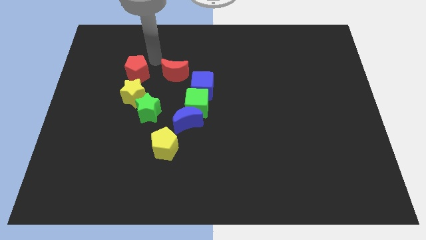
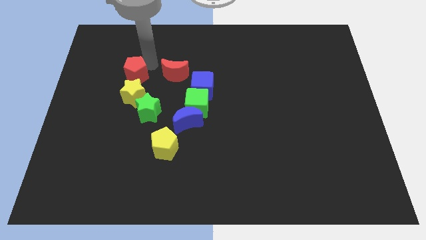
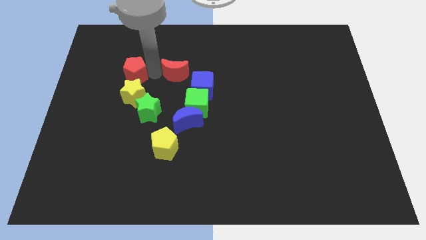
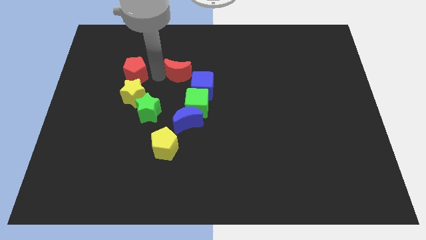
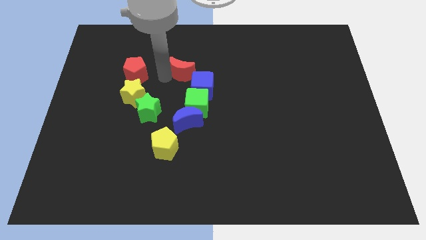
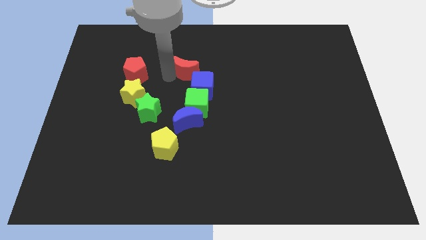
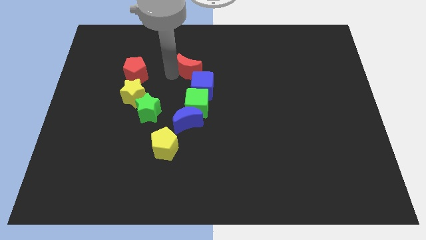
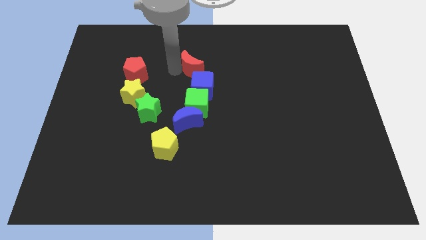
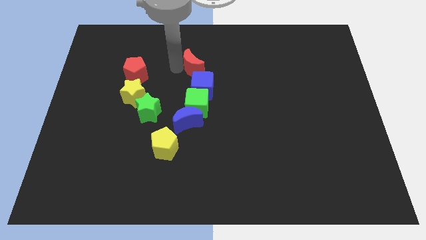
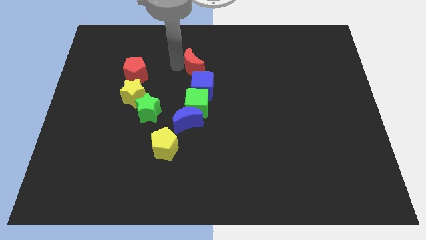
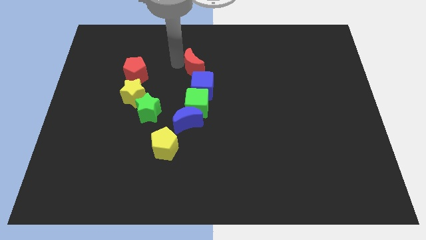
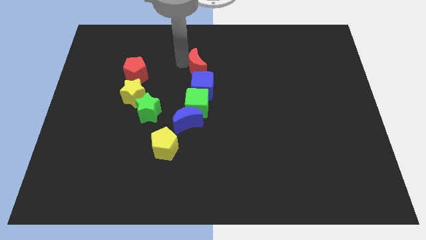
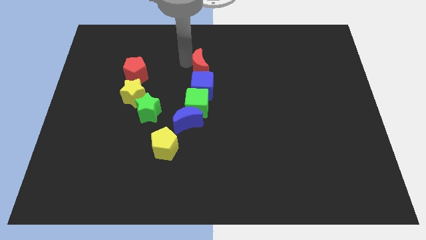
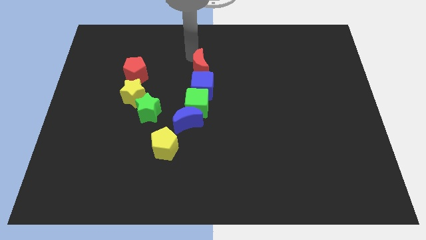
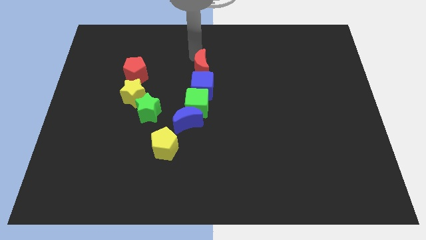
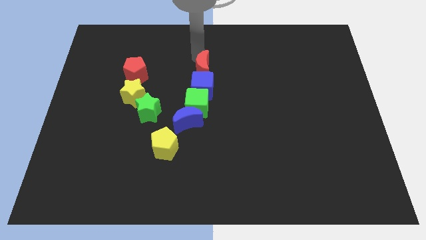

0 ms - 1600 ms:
place the red moon above the blue cube

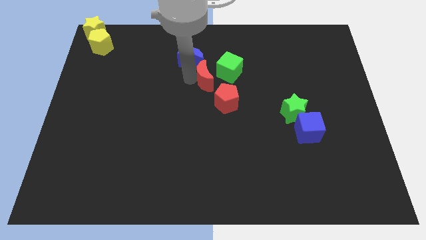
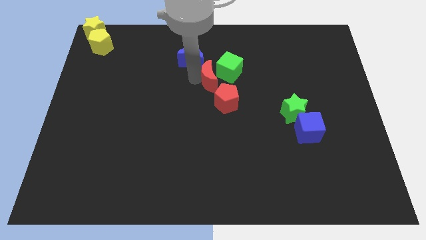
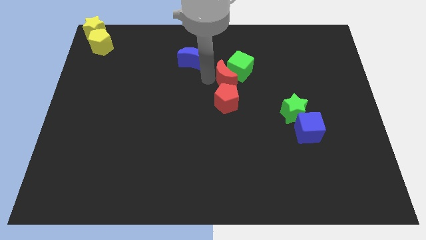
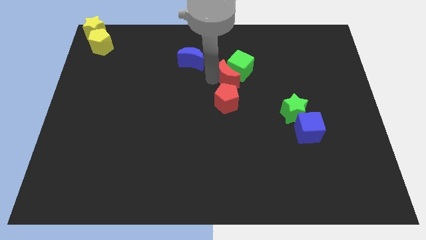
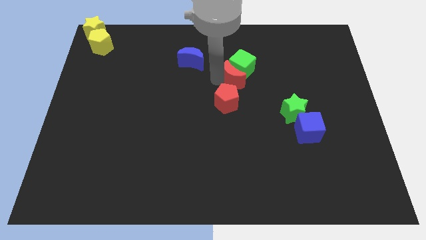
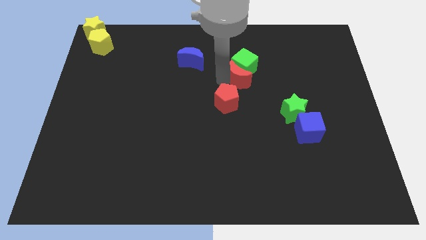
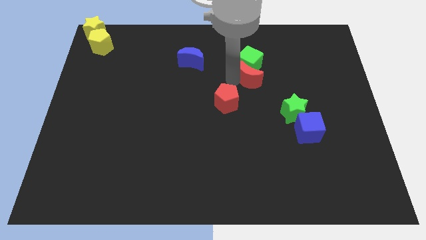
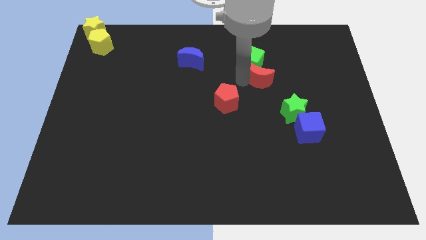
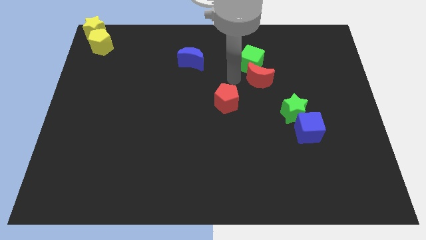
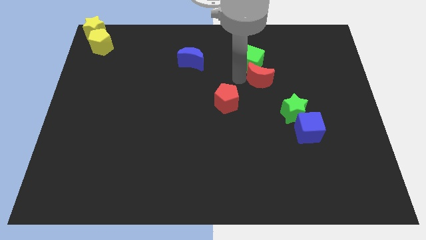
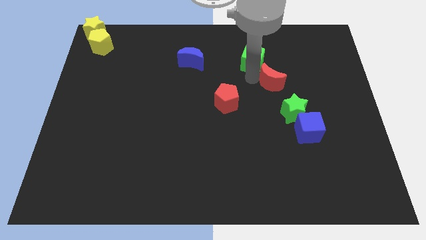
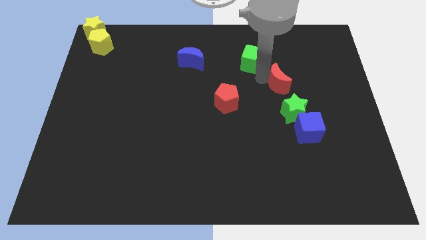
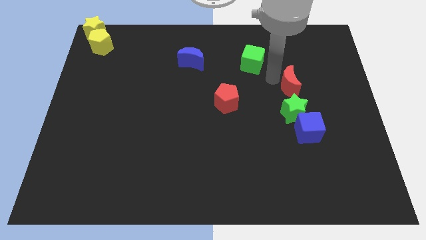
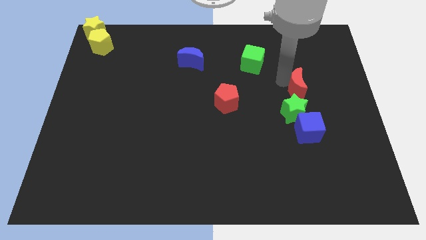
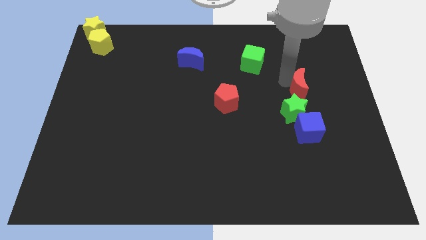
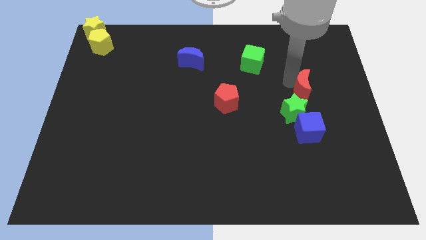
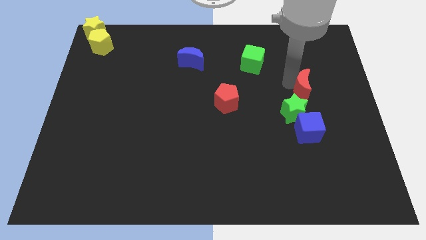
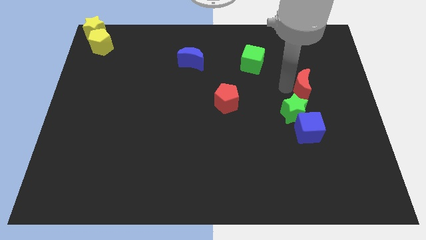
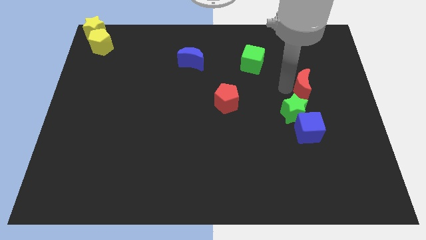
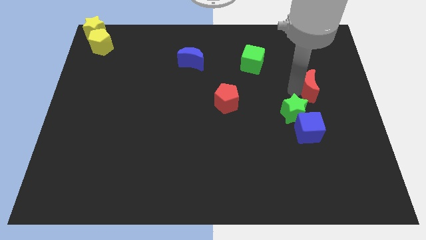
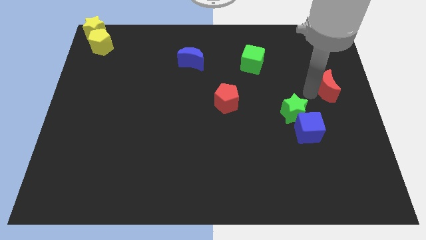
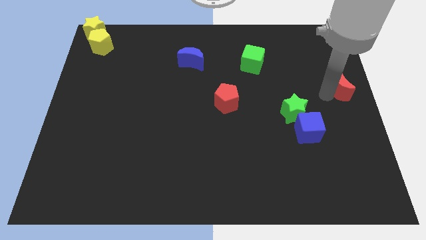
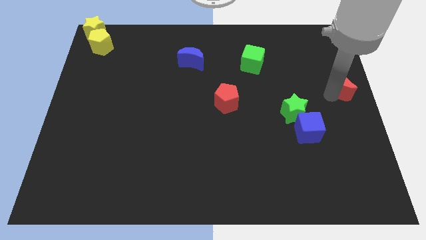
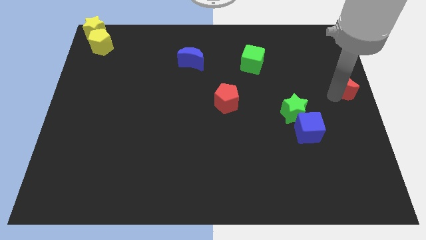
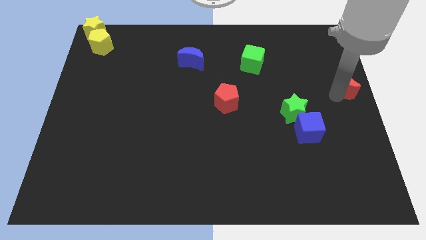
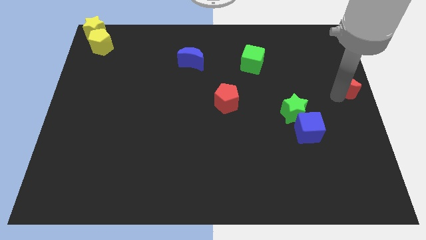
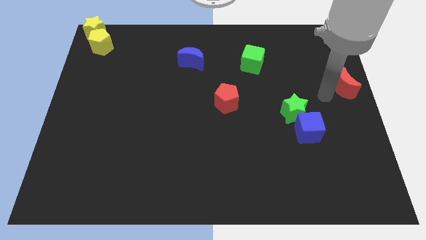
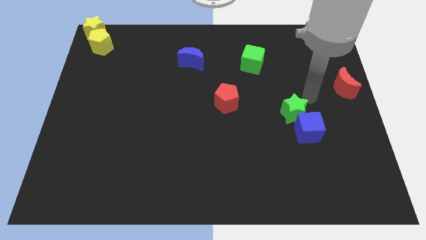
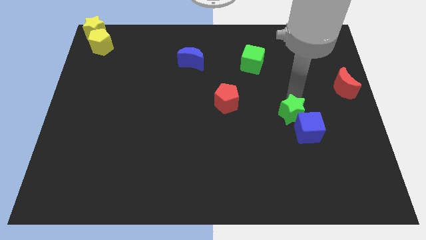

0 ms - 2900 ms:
slide the red moon to the center right

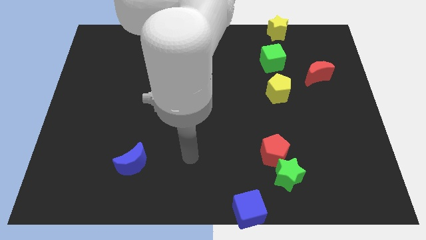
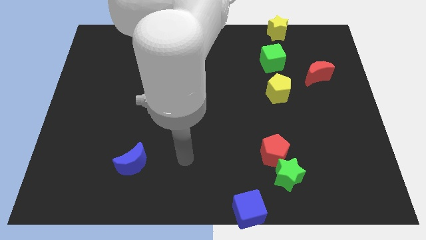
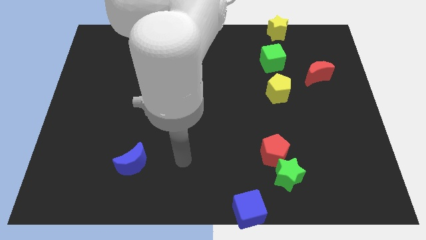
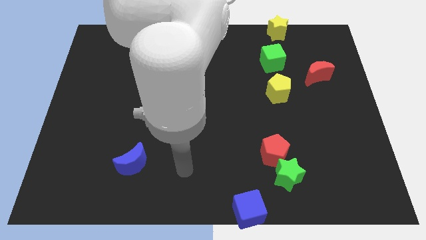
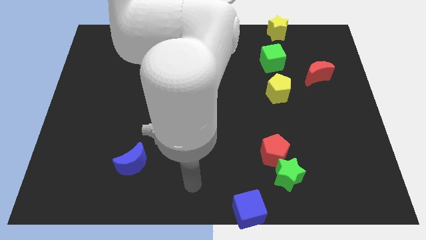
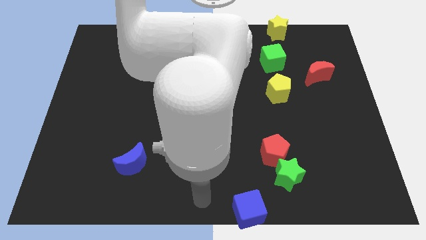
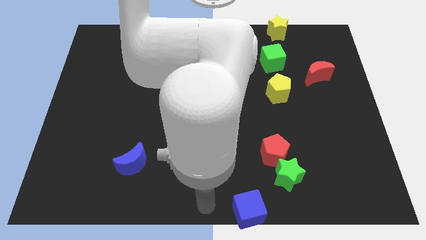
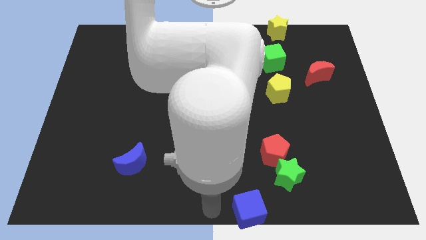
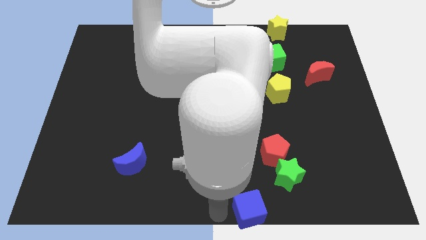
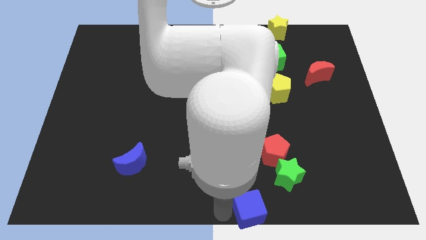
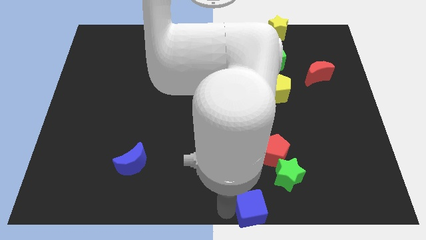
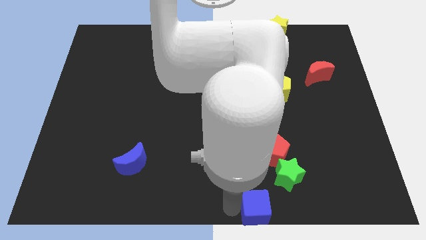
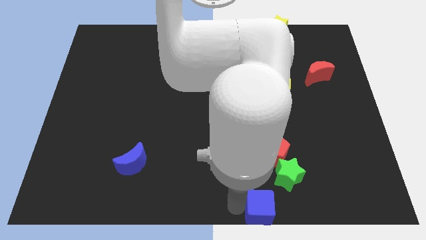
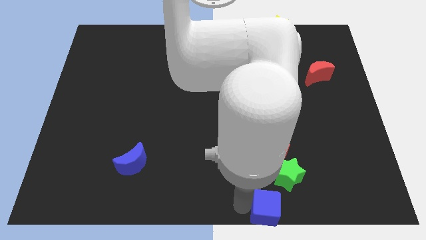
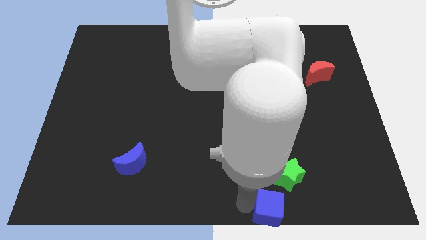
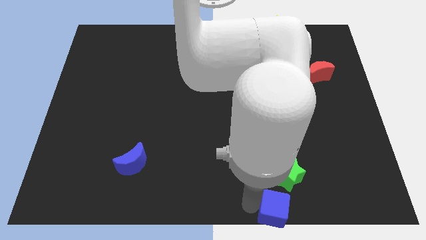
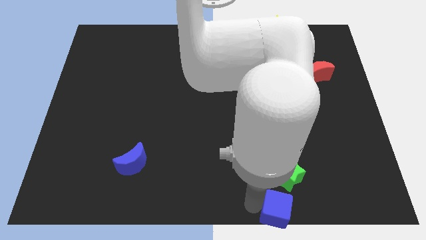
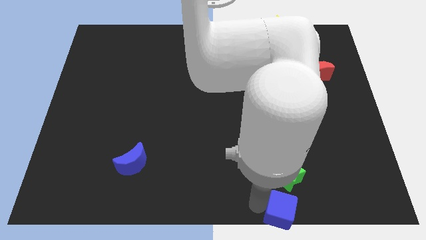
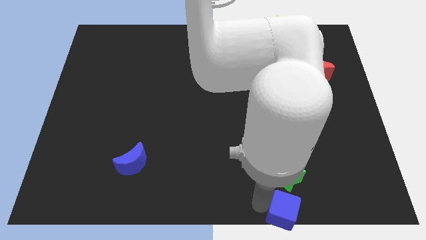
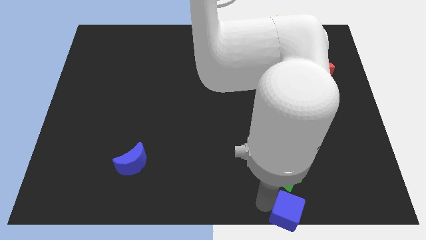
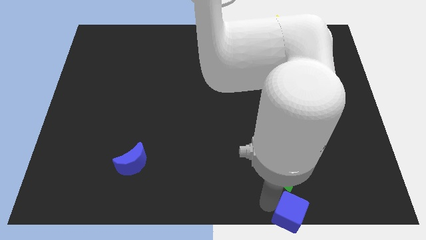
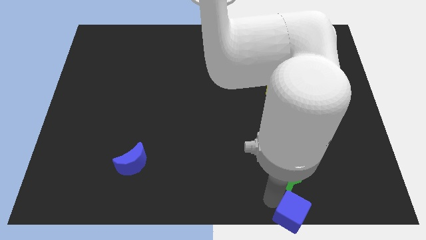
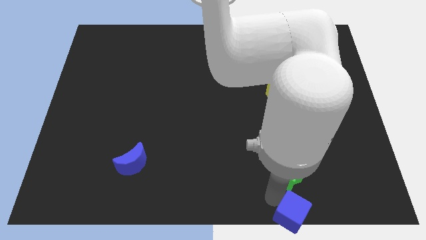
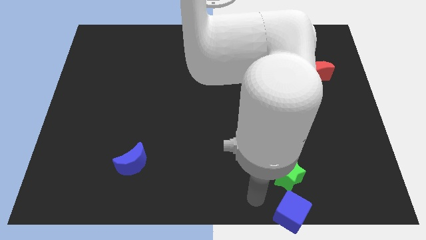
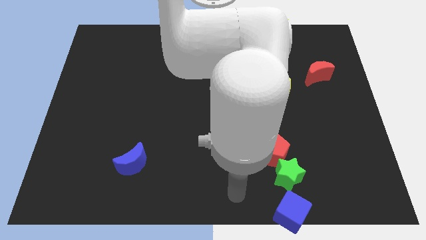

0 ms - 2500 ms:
push the blue cube under green star

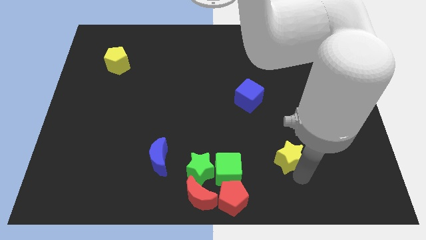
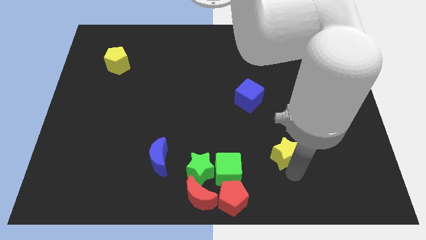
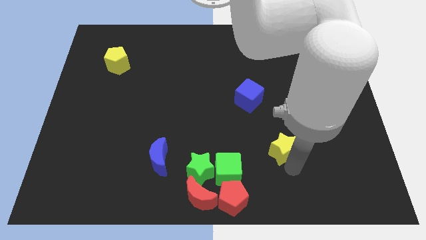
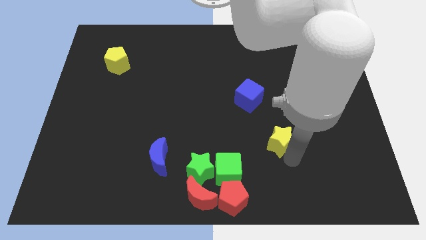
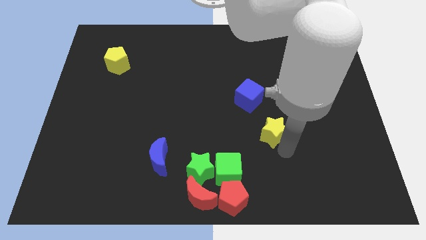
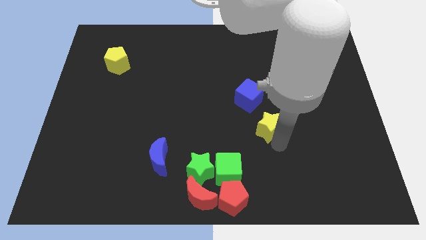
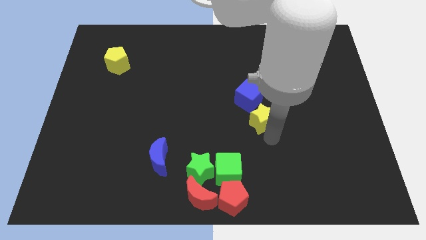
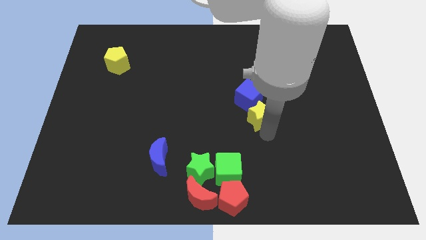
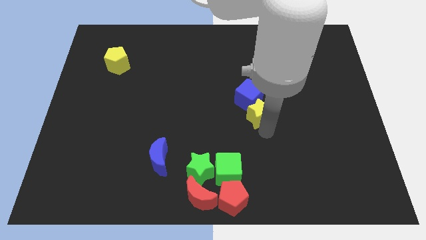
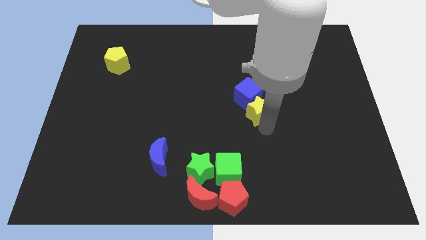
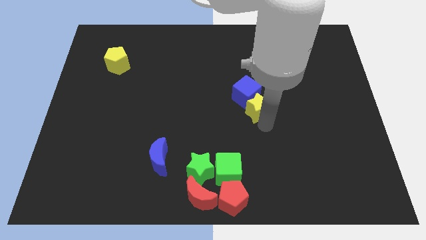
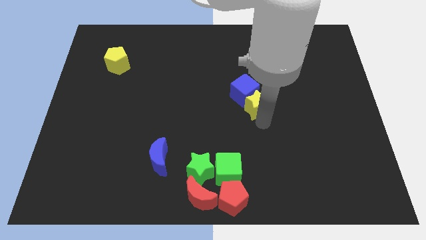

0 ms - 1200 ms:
push the yellow star below the blue cube

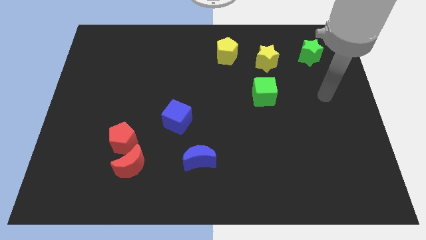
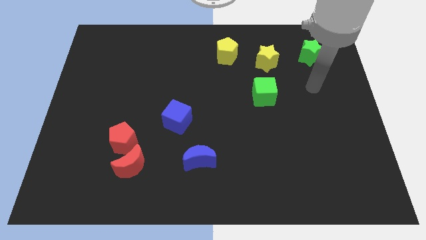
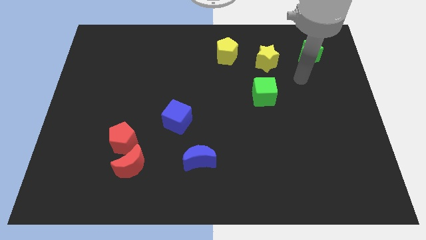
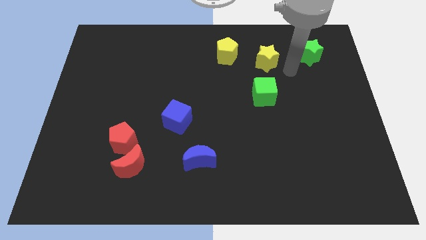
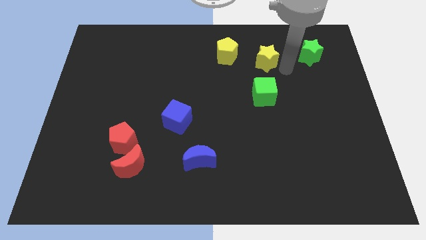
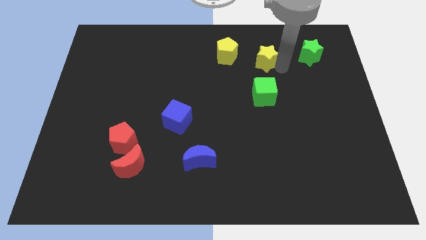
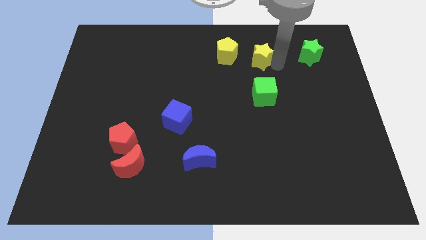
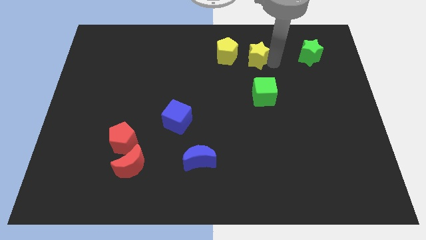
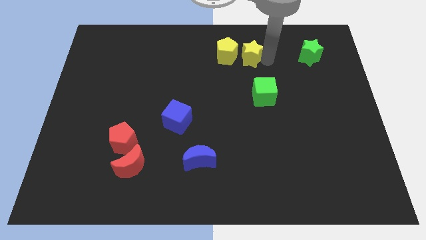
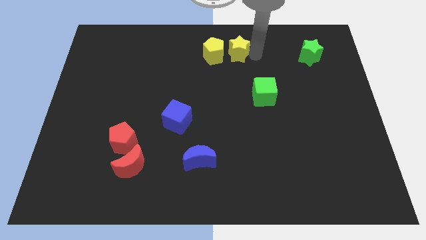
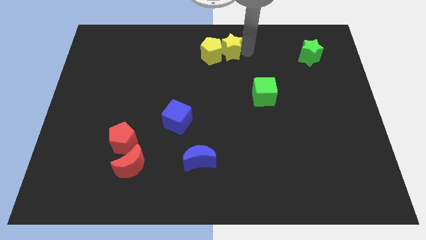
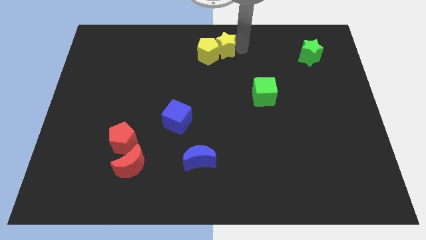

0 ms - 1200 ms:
move the yellow star into the yellow pentagon
